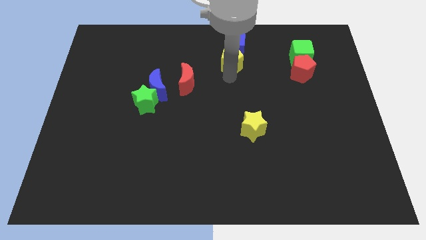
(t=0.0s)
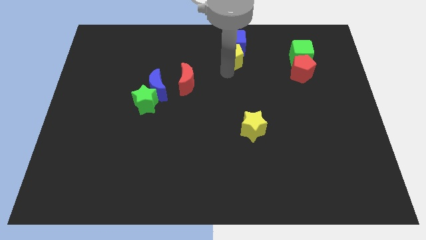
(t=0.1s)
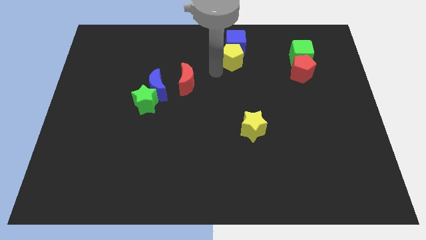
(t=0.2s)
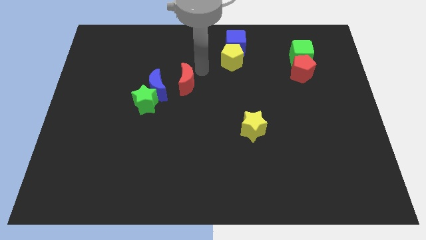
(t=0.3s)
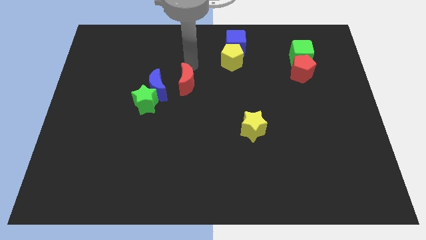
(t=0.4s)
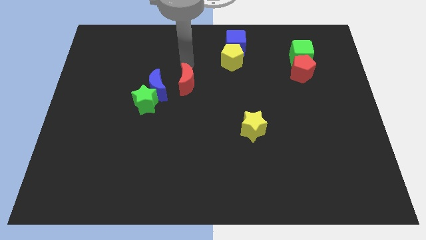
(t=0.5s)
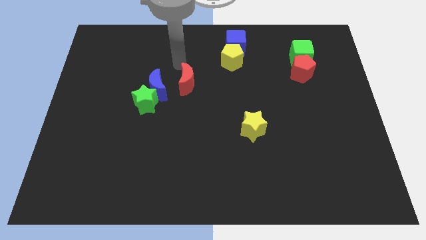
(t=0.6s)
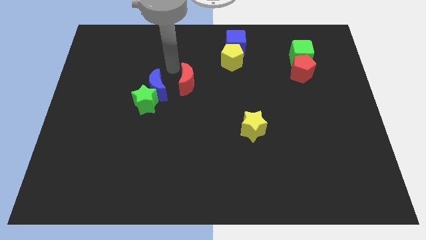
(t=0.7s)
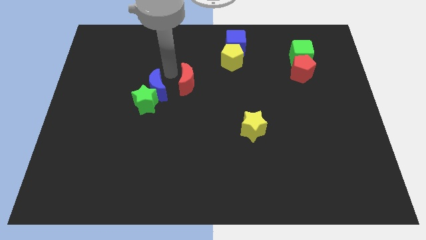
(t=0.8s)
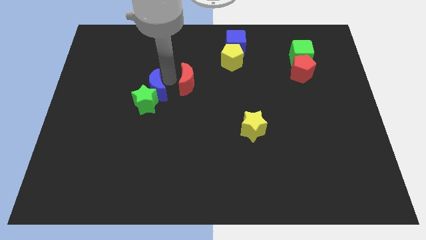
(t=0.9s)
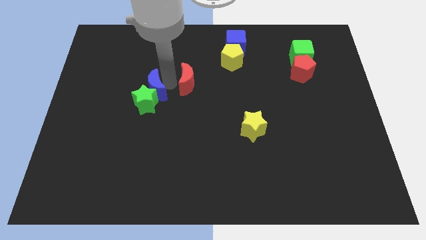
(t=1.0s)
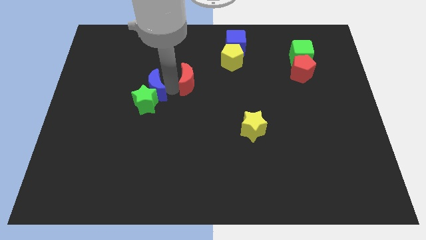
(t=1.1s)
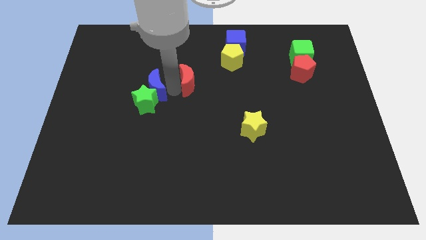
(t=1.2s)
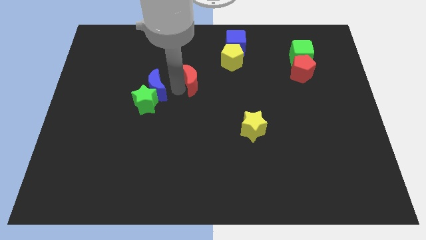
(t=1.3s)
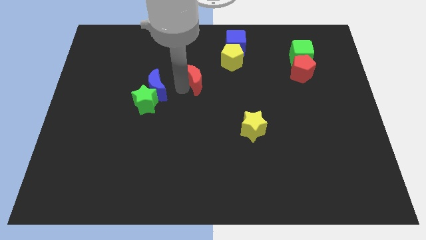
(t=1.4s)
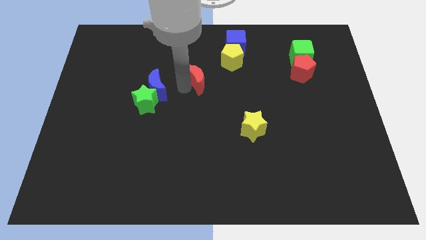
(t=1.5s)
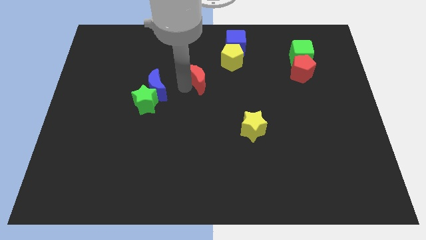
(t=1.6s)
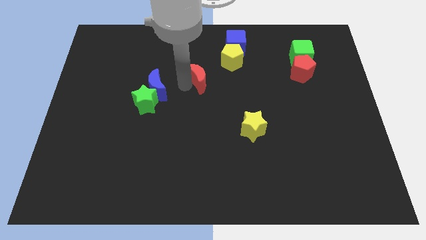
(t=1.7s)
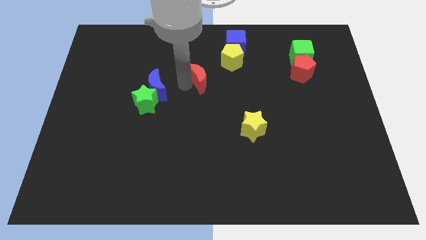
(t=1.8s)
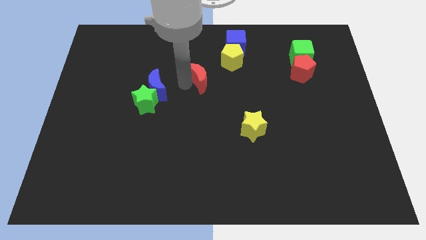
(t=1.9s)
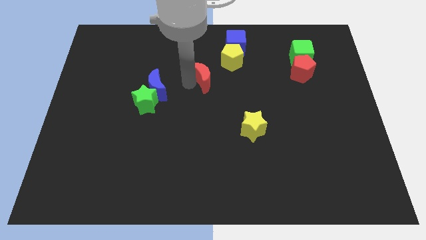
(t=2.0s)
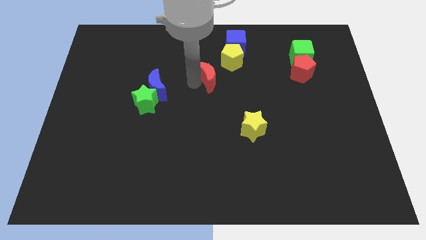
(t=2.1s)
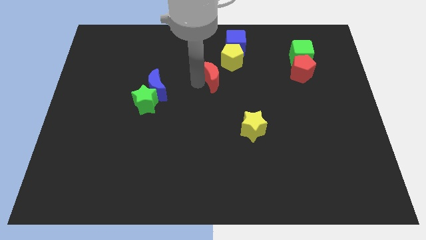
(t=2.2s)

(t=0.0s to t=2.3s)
move red moon left below the yellow pentagon

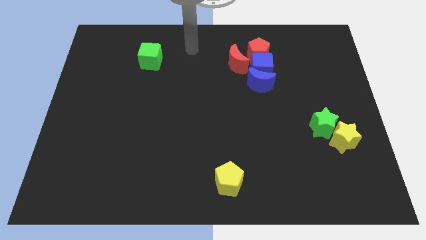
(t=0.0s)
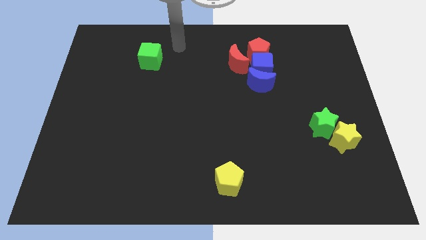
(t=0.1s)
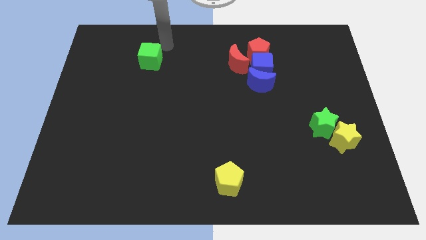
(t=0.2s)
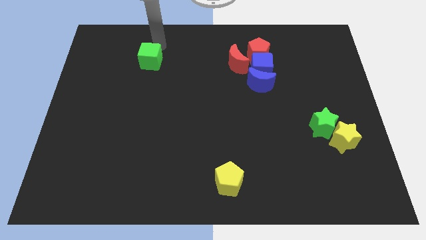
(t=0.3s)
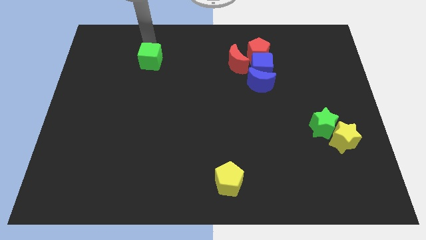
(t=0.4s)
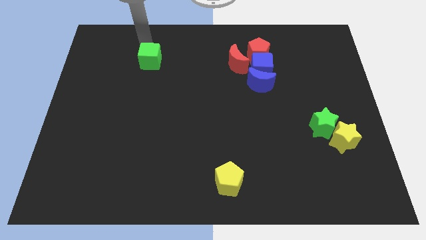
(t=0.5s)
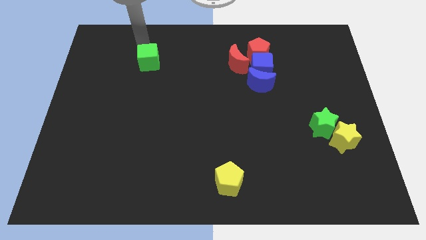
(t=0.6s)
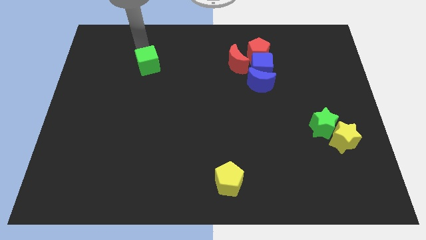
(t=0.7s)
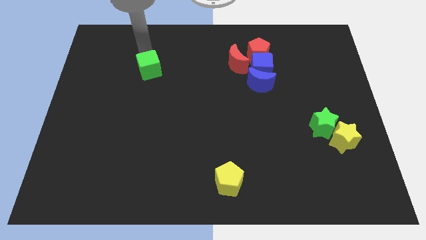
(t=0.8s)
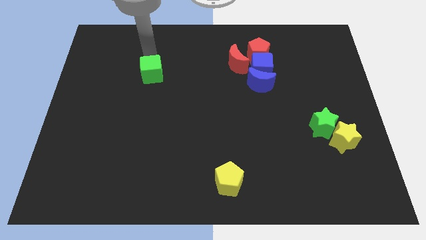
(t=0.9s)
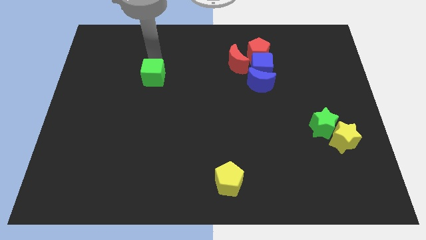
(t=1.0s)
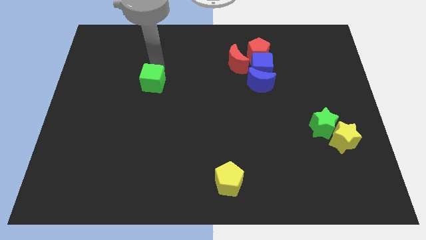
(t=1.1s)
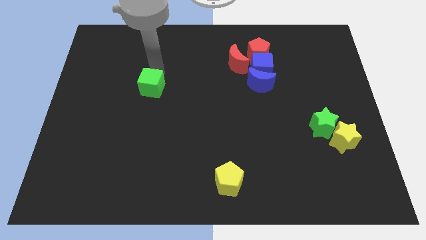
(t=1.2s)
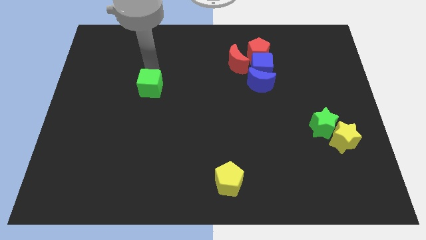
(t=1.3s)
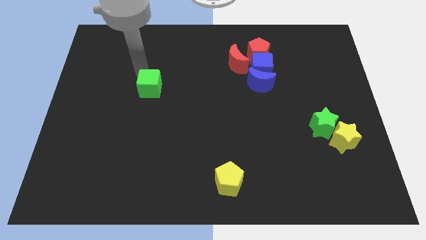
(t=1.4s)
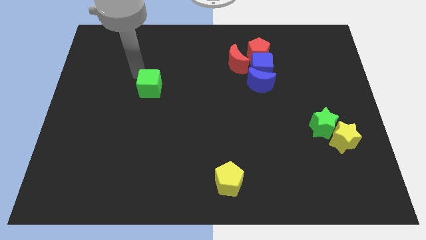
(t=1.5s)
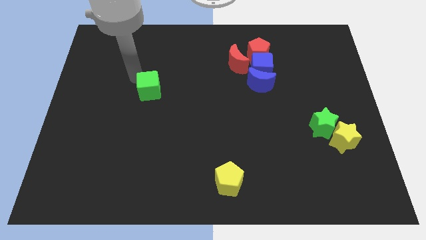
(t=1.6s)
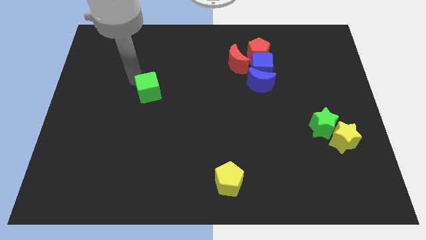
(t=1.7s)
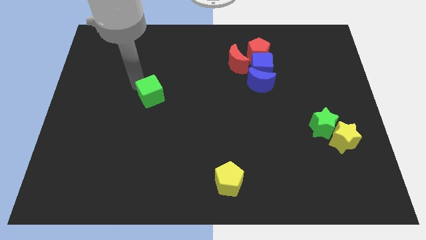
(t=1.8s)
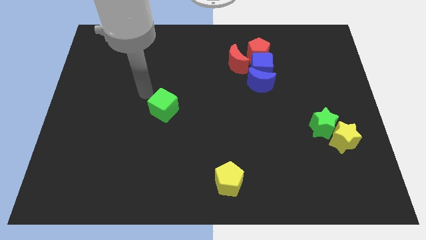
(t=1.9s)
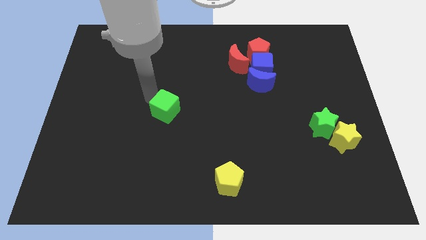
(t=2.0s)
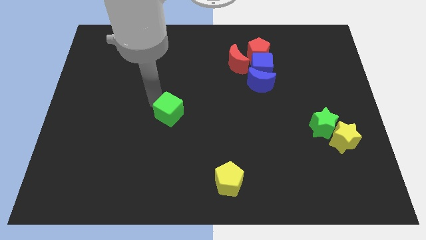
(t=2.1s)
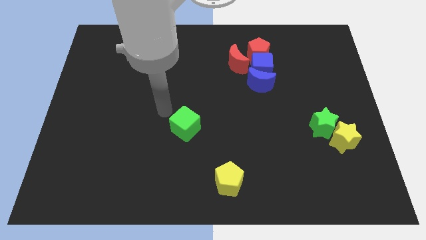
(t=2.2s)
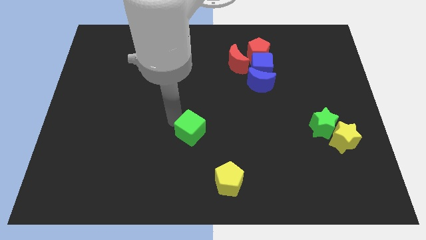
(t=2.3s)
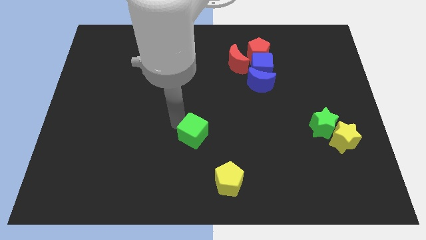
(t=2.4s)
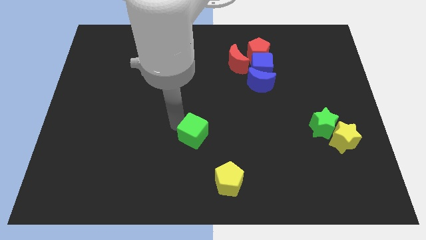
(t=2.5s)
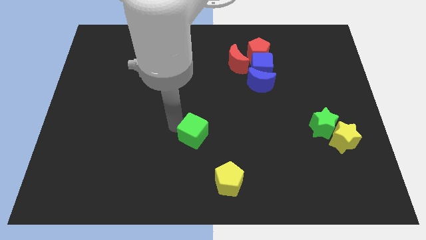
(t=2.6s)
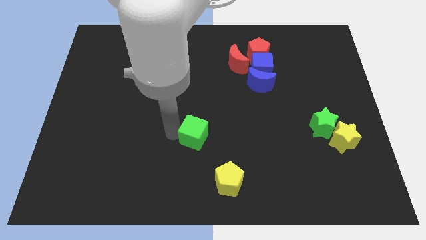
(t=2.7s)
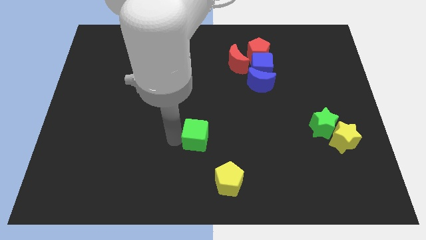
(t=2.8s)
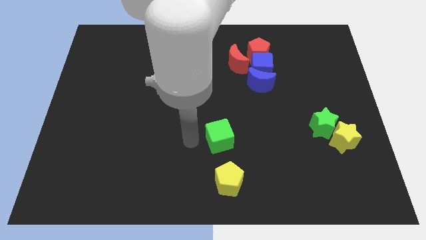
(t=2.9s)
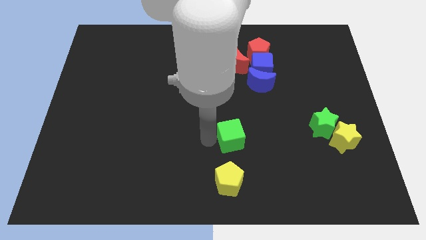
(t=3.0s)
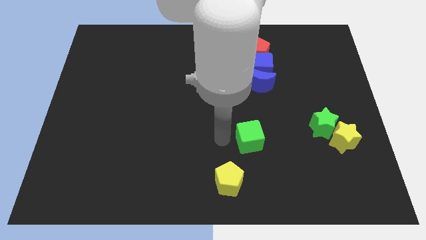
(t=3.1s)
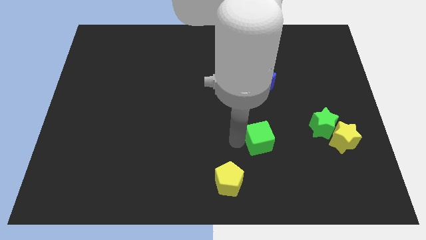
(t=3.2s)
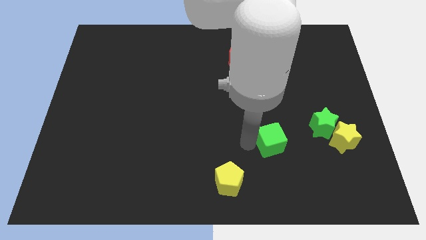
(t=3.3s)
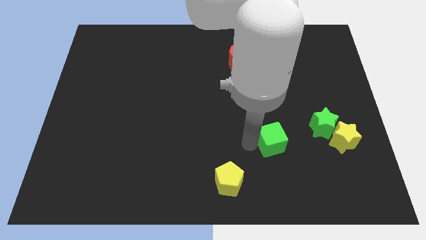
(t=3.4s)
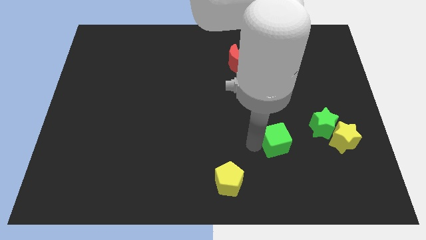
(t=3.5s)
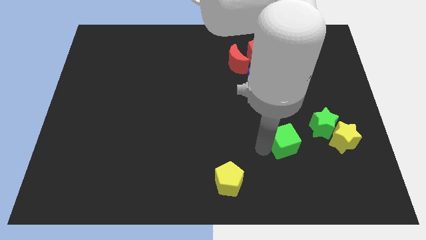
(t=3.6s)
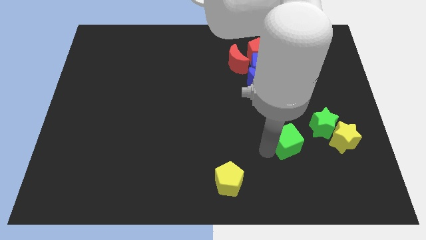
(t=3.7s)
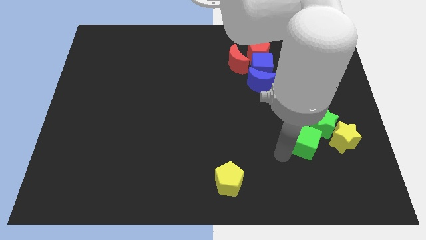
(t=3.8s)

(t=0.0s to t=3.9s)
move the green cube to the bottom left side of the green star

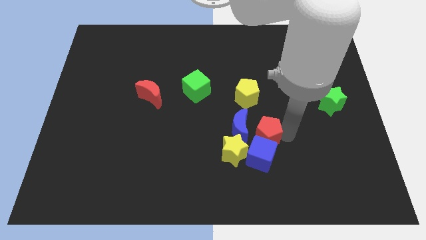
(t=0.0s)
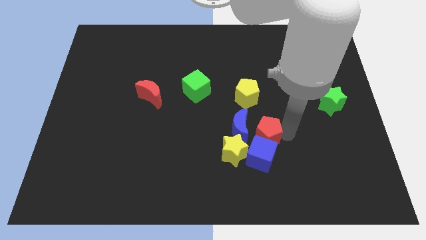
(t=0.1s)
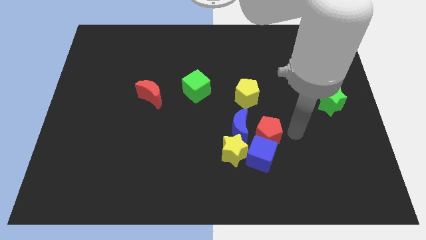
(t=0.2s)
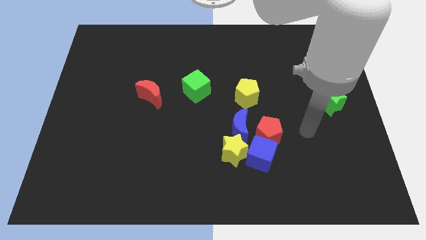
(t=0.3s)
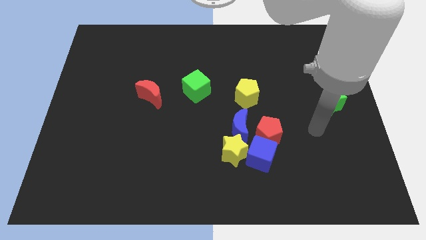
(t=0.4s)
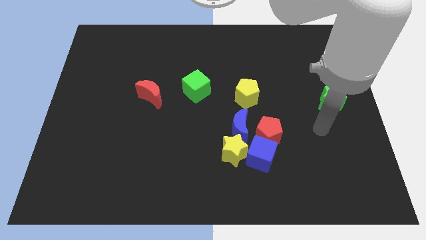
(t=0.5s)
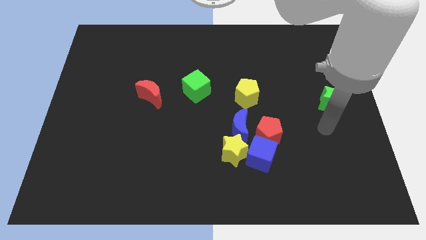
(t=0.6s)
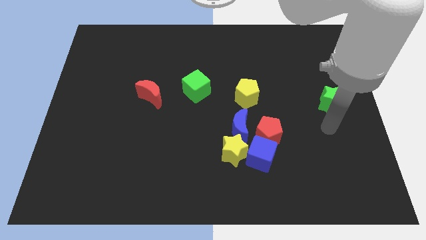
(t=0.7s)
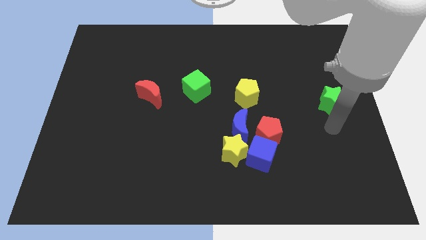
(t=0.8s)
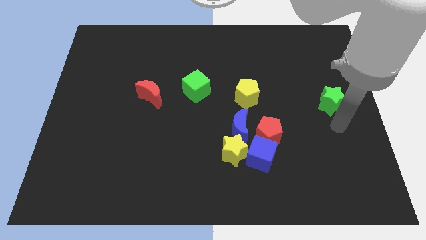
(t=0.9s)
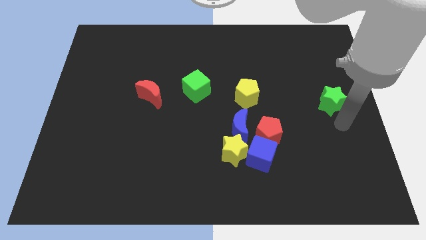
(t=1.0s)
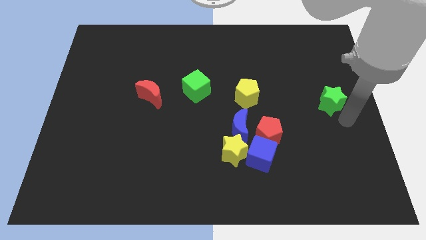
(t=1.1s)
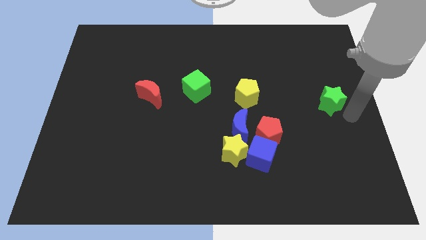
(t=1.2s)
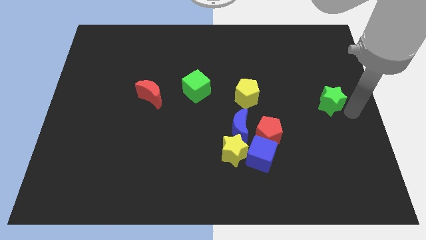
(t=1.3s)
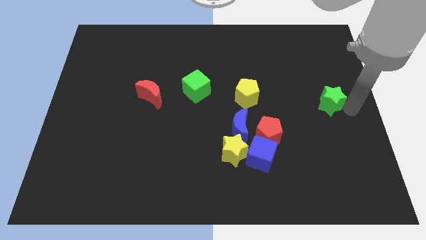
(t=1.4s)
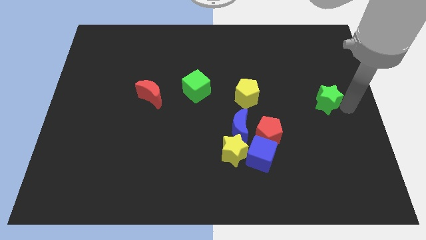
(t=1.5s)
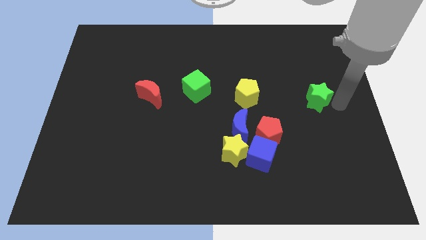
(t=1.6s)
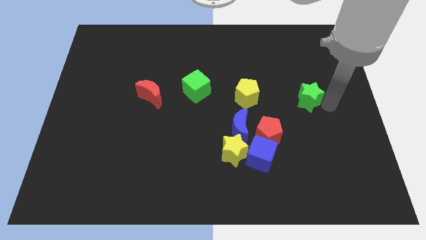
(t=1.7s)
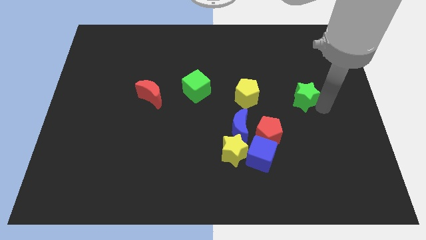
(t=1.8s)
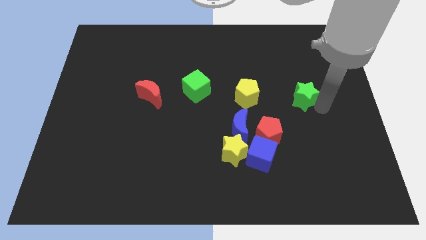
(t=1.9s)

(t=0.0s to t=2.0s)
point your arm right to green star

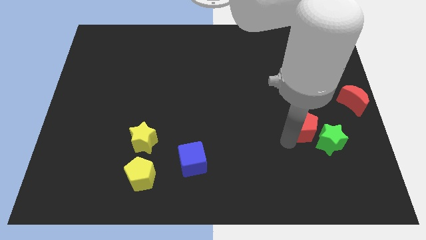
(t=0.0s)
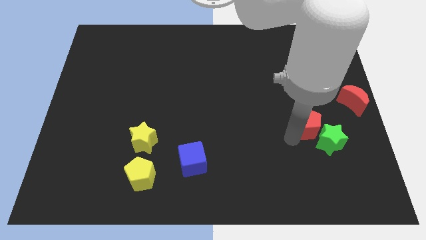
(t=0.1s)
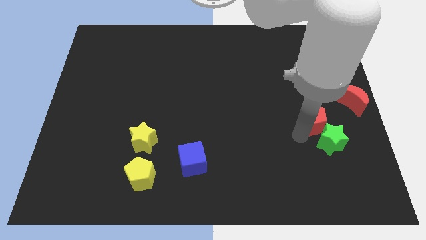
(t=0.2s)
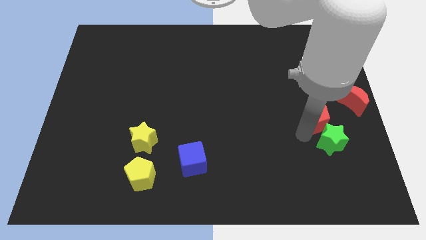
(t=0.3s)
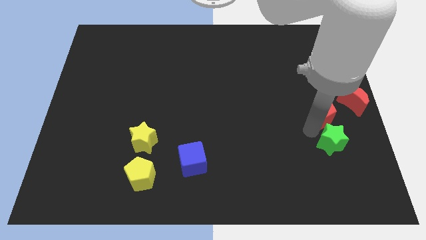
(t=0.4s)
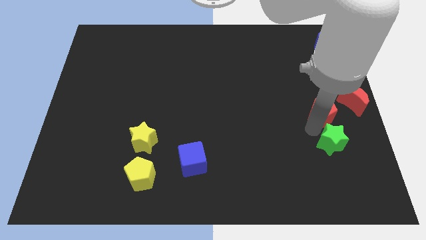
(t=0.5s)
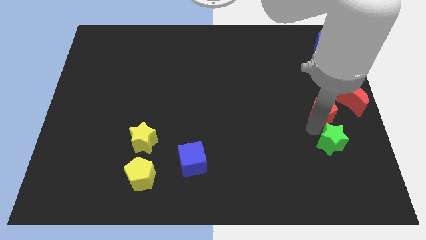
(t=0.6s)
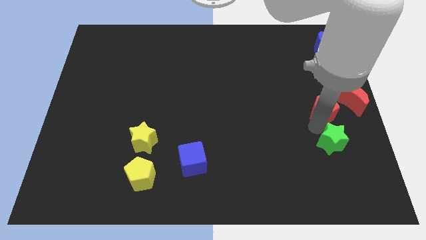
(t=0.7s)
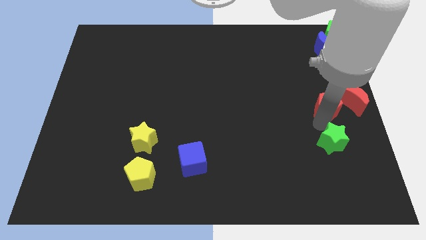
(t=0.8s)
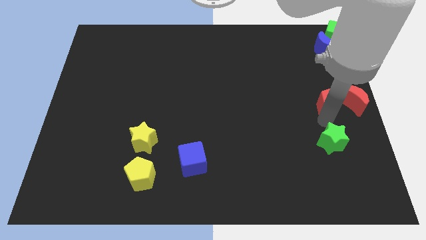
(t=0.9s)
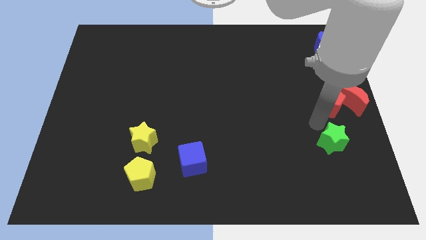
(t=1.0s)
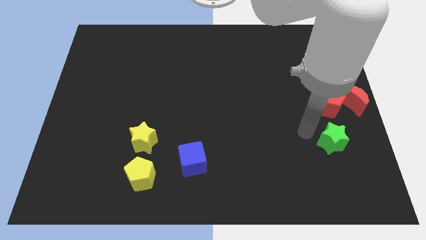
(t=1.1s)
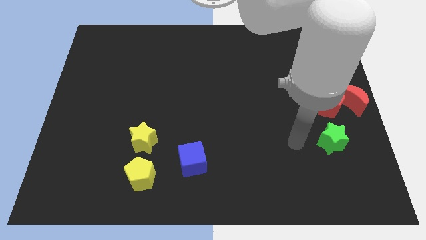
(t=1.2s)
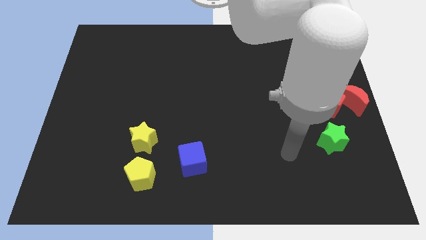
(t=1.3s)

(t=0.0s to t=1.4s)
place the red pentagon above the green star
